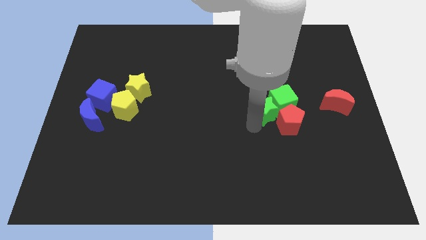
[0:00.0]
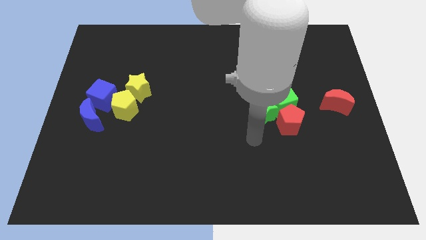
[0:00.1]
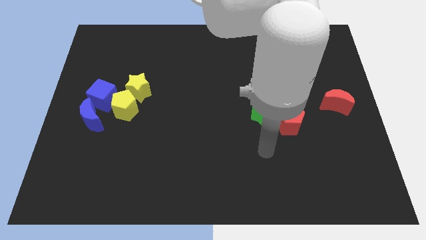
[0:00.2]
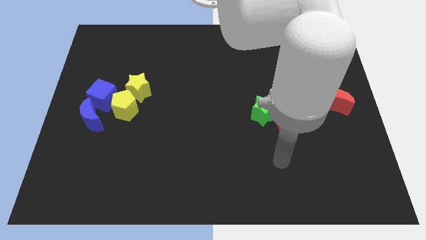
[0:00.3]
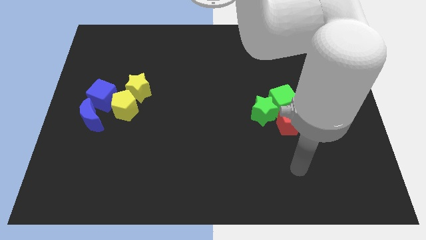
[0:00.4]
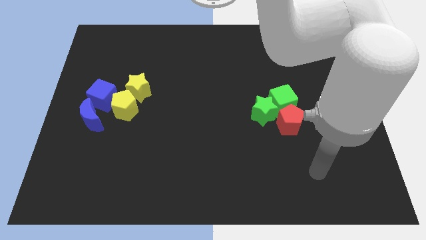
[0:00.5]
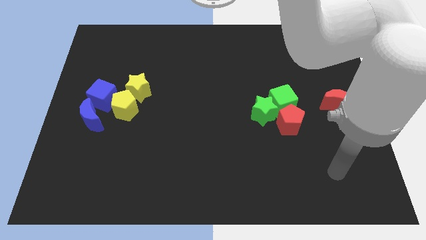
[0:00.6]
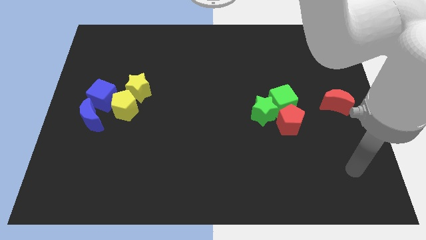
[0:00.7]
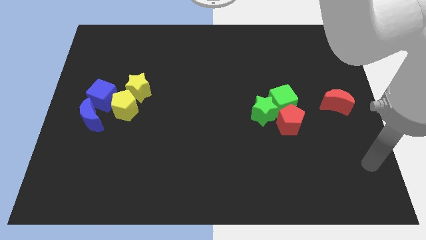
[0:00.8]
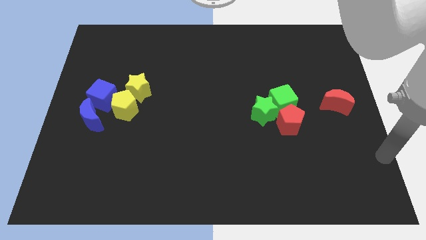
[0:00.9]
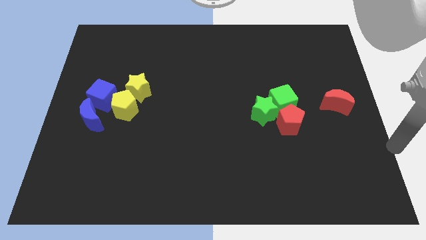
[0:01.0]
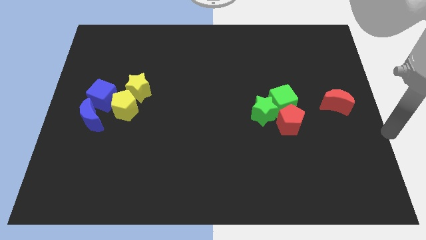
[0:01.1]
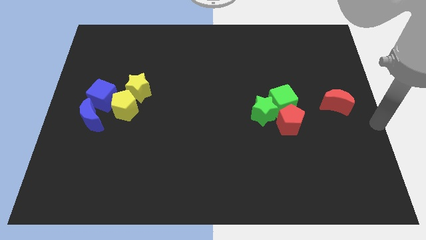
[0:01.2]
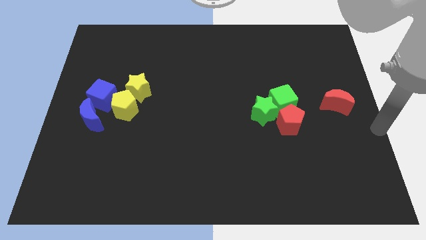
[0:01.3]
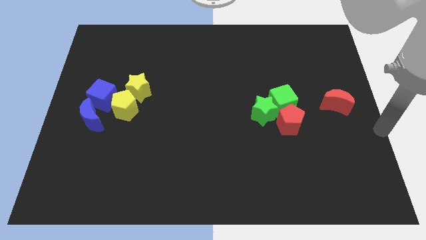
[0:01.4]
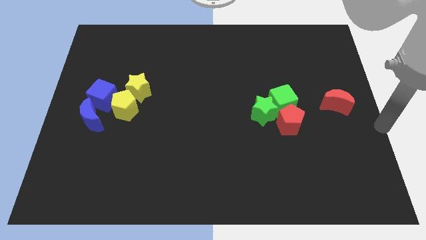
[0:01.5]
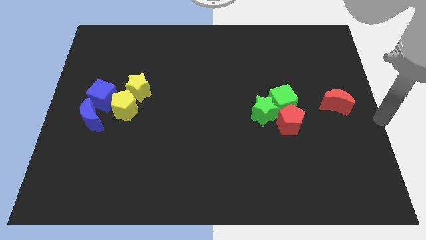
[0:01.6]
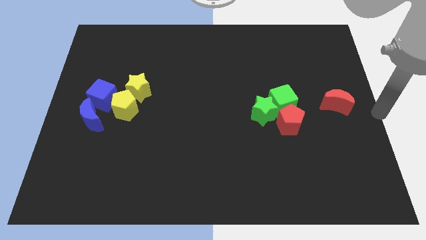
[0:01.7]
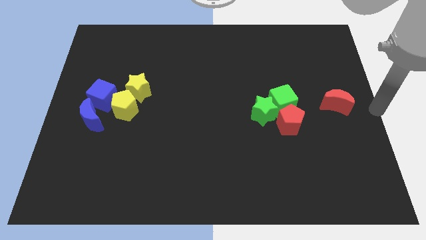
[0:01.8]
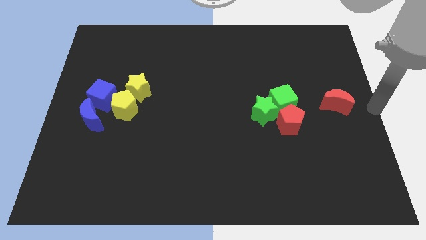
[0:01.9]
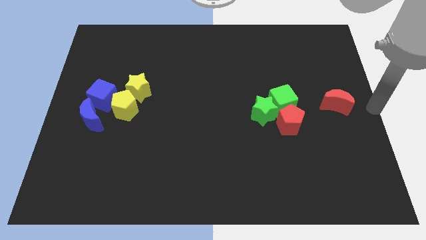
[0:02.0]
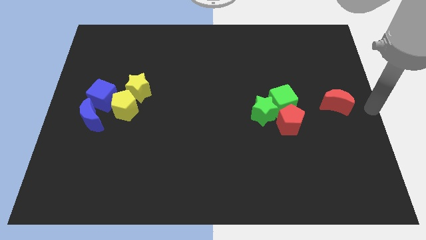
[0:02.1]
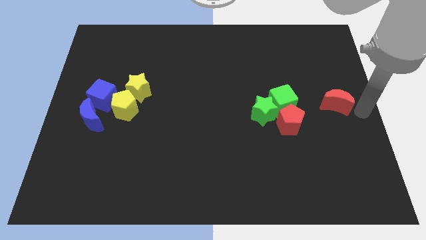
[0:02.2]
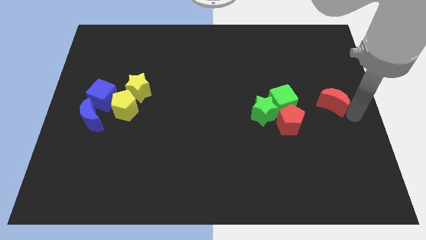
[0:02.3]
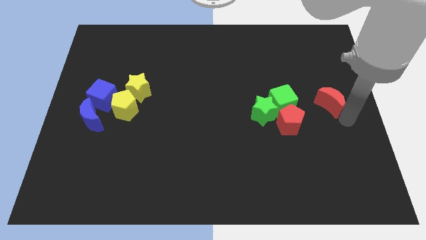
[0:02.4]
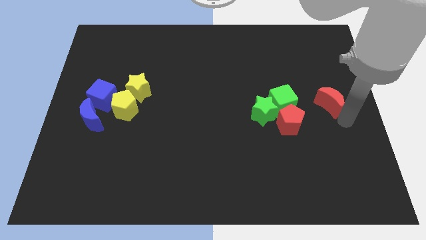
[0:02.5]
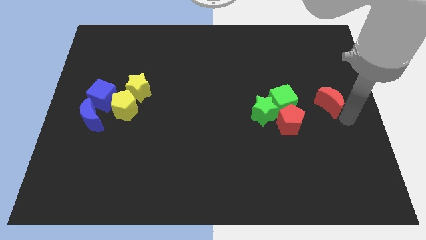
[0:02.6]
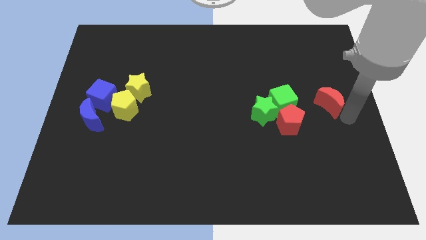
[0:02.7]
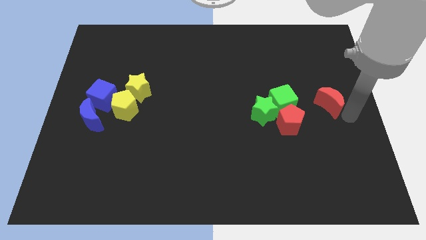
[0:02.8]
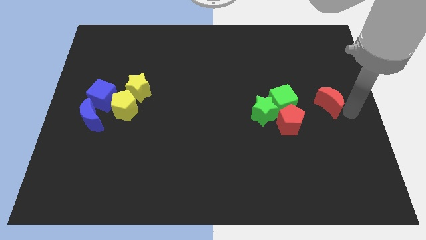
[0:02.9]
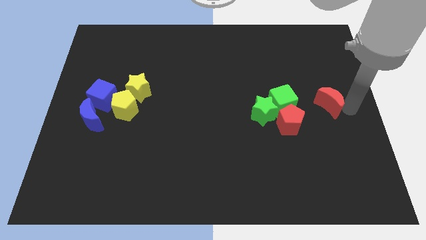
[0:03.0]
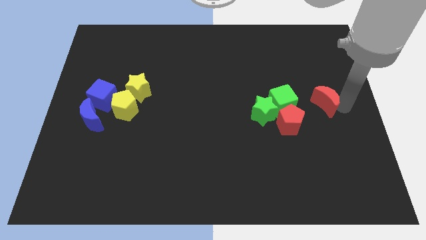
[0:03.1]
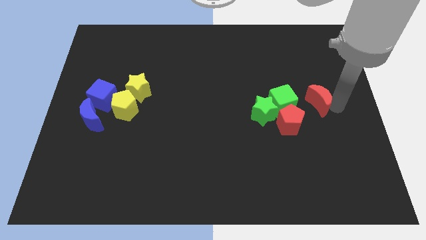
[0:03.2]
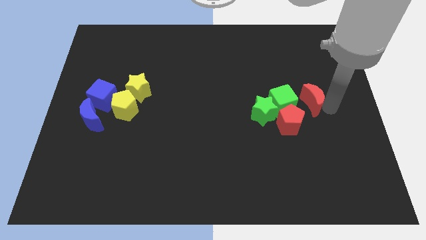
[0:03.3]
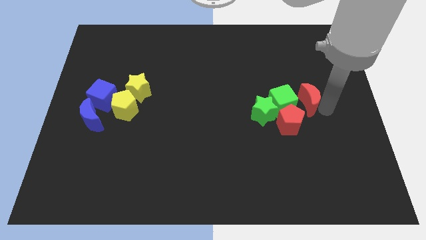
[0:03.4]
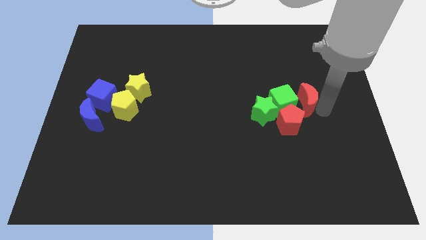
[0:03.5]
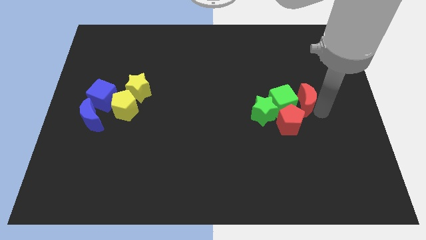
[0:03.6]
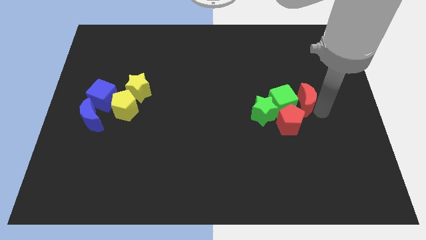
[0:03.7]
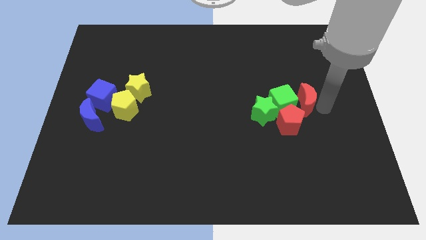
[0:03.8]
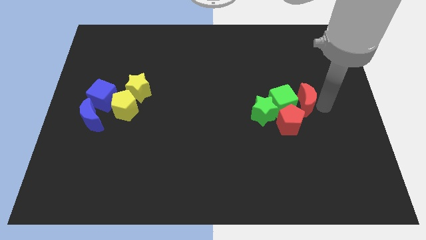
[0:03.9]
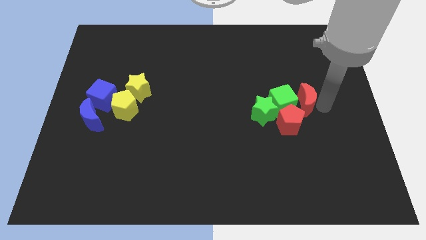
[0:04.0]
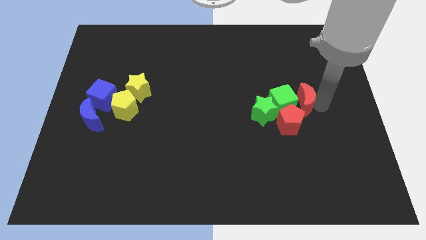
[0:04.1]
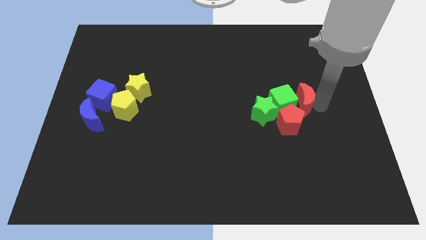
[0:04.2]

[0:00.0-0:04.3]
push red moon into the green cube

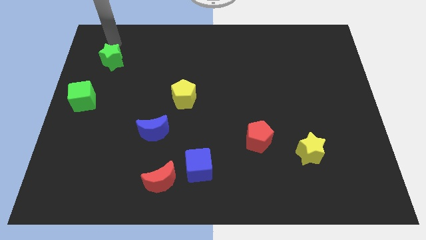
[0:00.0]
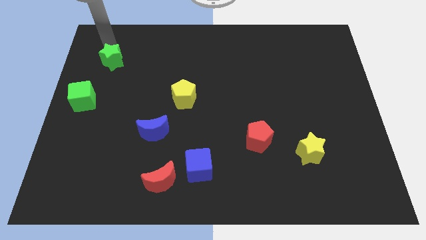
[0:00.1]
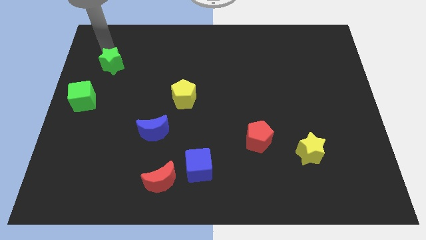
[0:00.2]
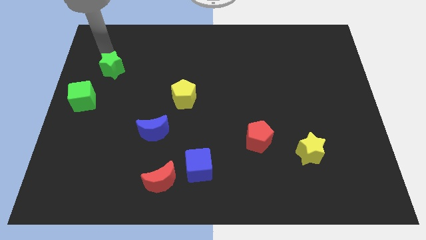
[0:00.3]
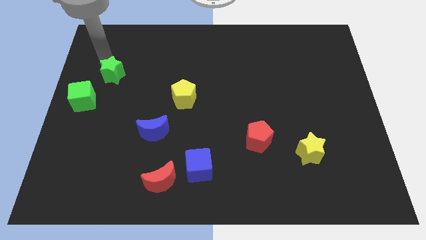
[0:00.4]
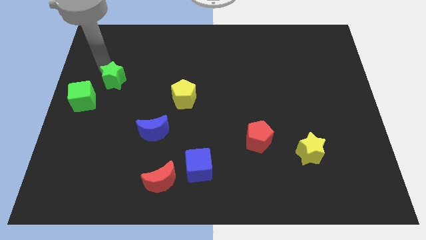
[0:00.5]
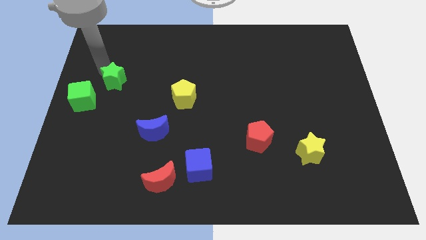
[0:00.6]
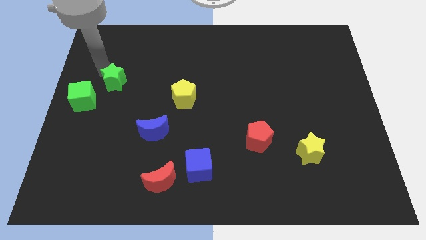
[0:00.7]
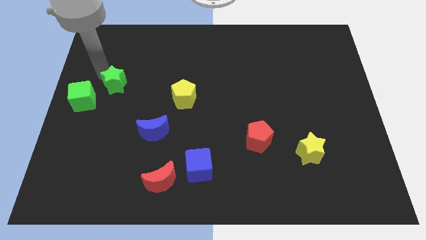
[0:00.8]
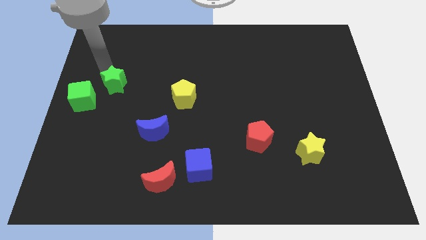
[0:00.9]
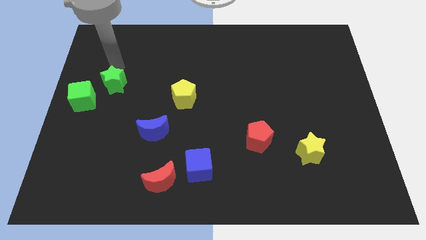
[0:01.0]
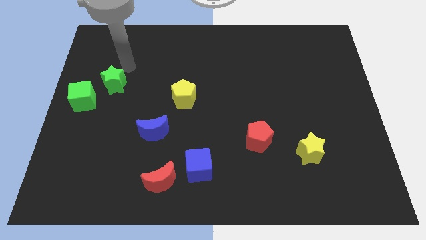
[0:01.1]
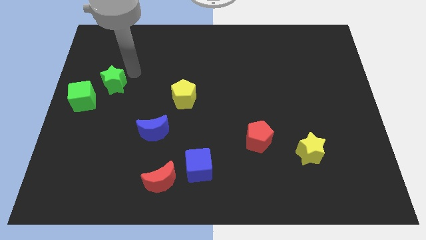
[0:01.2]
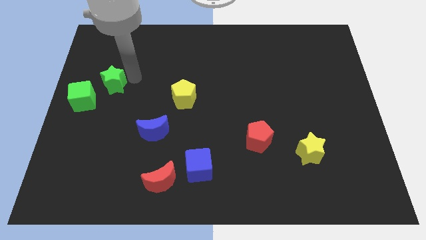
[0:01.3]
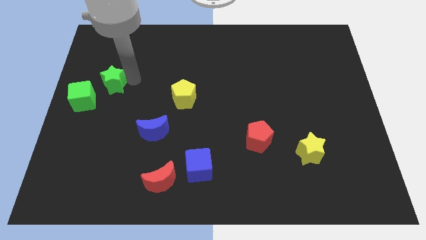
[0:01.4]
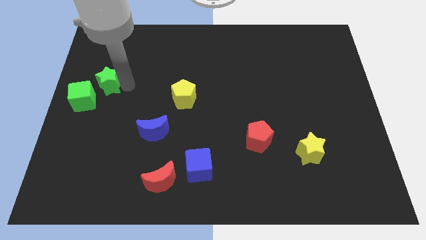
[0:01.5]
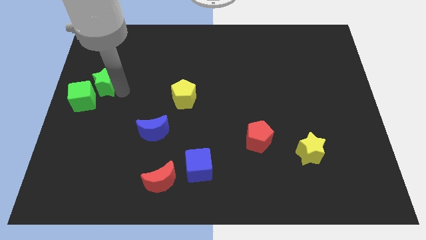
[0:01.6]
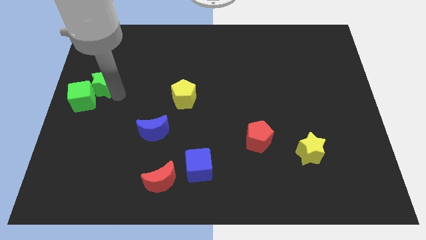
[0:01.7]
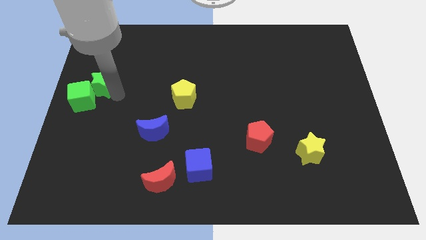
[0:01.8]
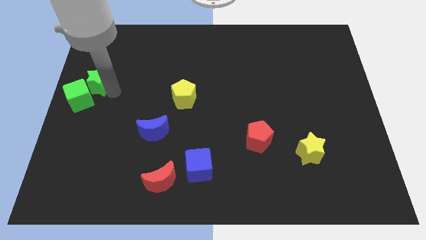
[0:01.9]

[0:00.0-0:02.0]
push the green star into the green cube

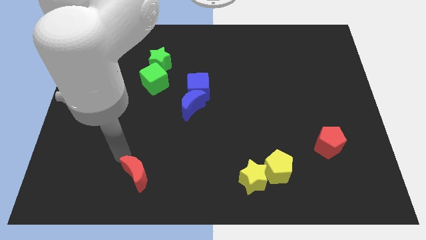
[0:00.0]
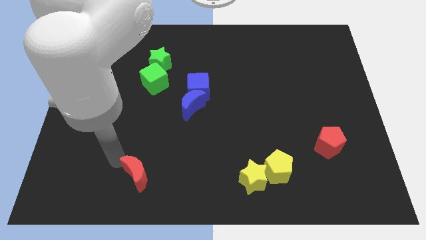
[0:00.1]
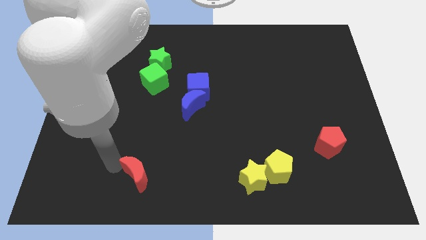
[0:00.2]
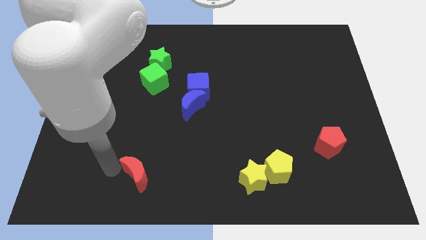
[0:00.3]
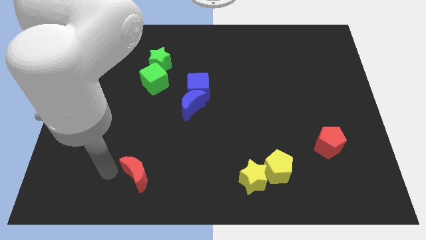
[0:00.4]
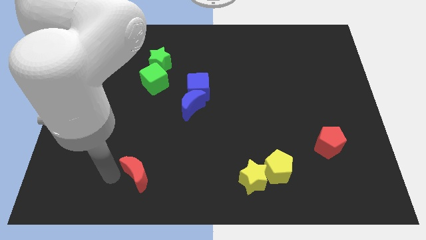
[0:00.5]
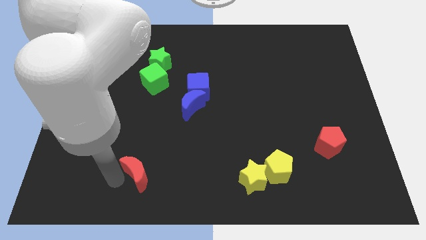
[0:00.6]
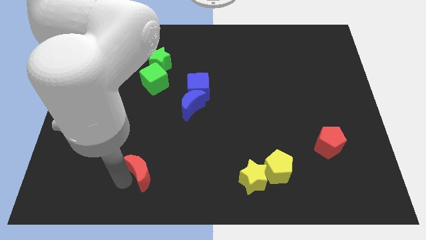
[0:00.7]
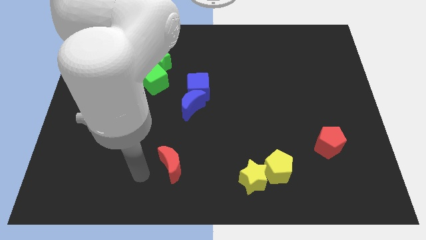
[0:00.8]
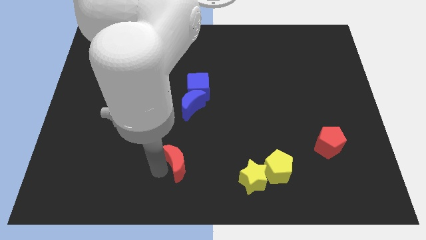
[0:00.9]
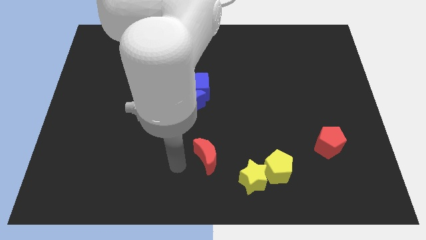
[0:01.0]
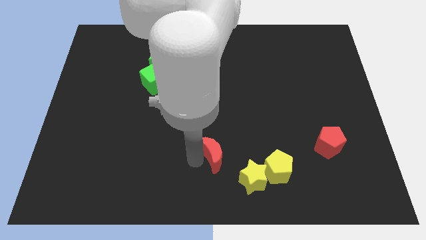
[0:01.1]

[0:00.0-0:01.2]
place the red moon diagonally bottom right to the blue moon

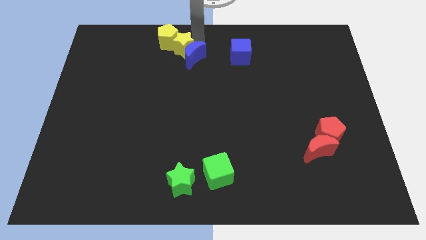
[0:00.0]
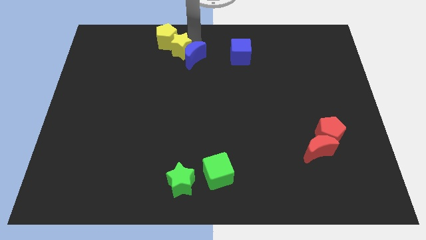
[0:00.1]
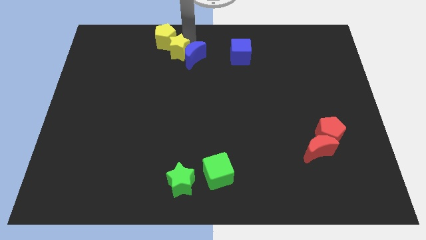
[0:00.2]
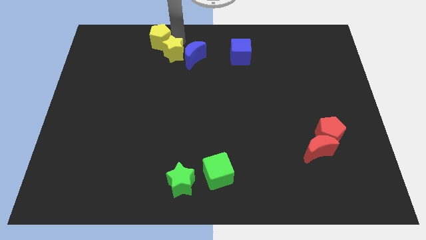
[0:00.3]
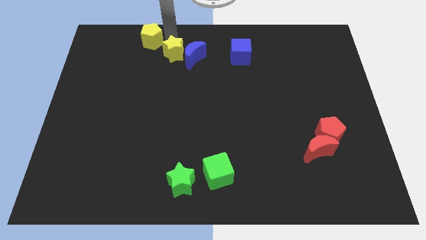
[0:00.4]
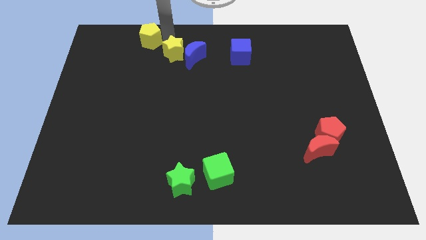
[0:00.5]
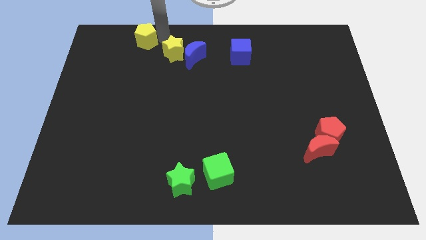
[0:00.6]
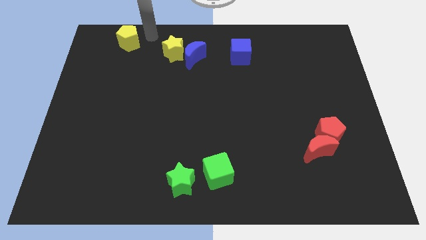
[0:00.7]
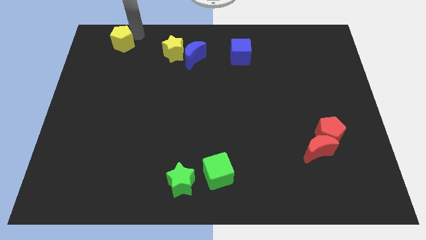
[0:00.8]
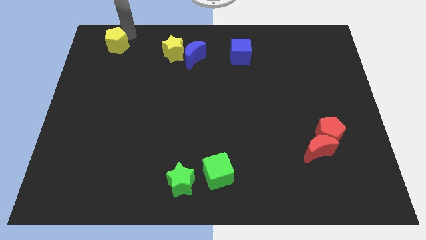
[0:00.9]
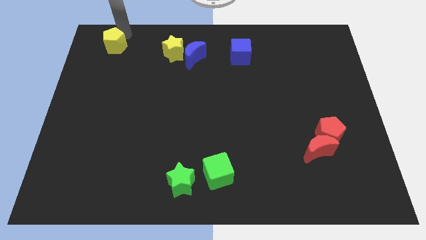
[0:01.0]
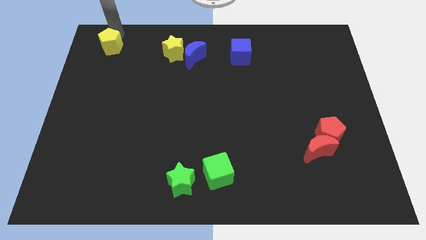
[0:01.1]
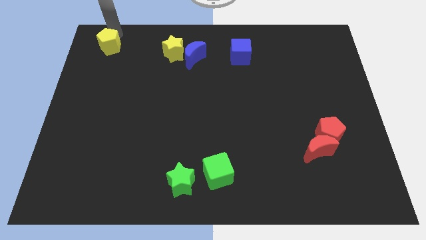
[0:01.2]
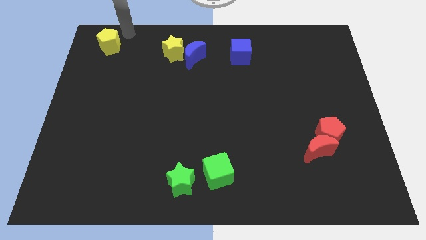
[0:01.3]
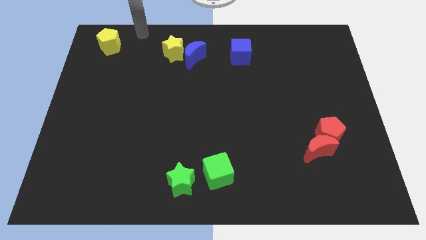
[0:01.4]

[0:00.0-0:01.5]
separate the yellow pentagon and the yellow star
